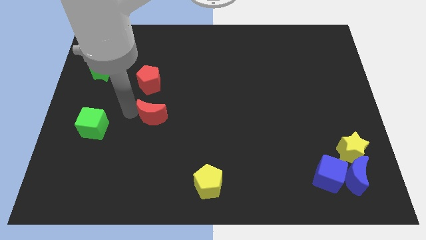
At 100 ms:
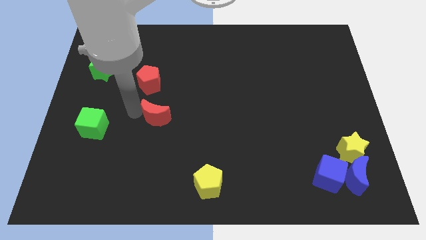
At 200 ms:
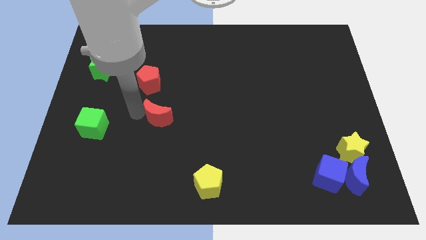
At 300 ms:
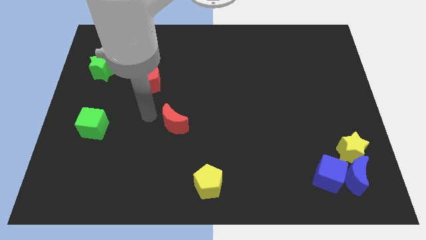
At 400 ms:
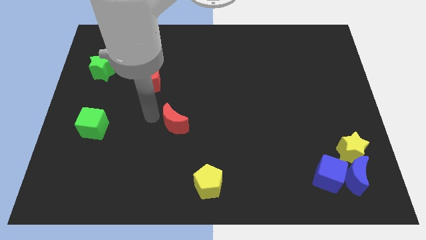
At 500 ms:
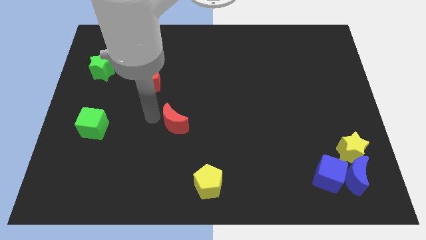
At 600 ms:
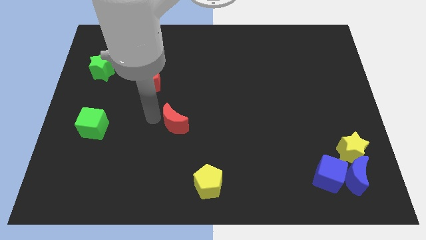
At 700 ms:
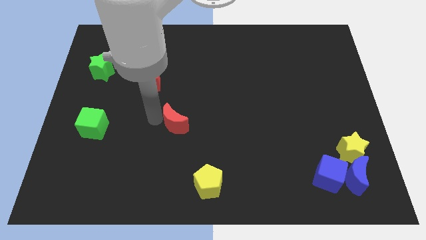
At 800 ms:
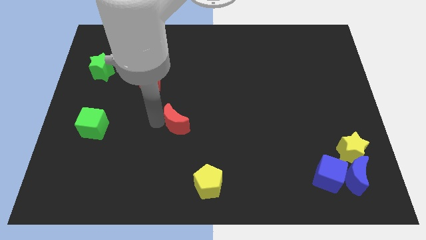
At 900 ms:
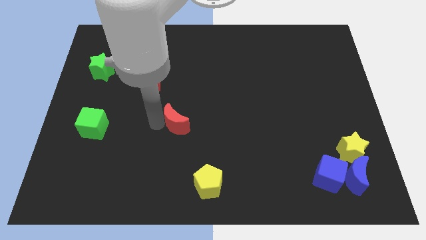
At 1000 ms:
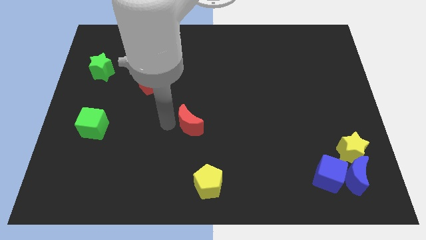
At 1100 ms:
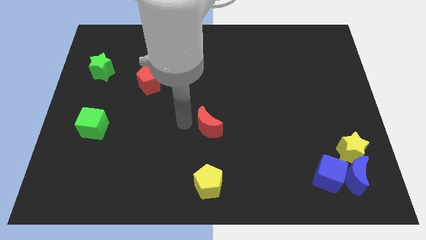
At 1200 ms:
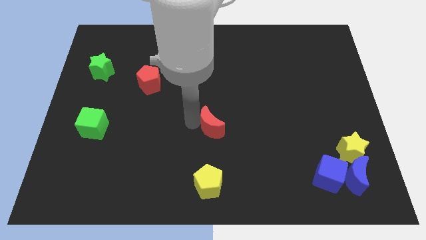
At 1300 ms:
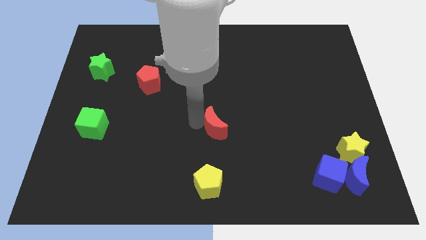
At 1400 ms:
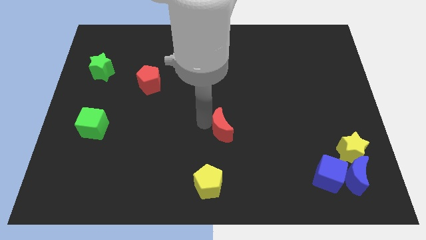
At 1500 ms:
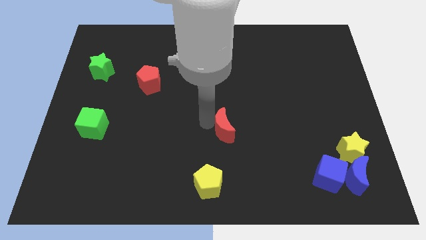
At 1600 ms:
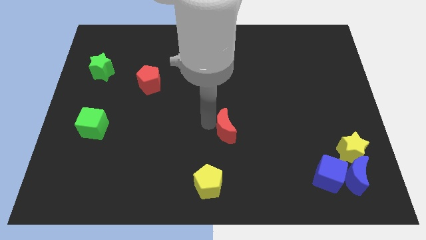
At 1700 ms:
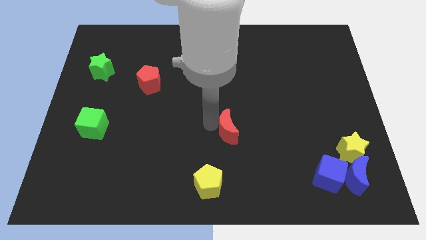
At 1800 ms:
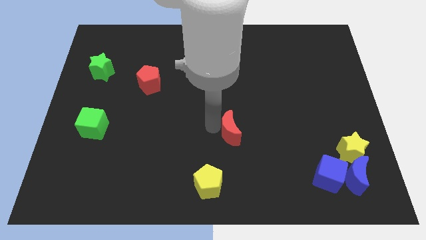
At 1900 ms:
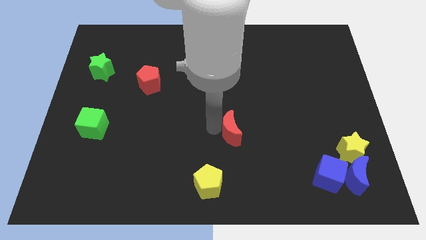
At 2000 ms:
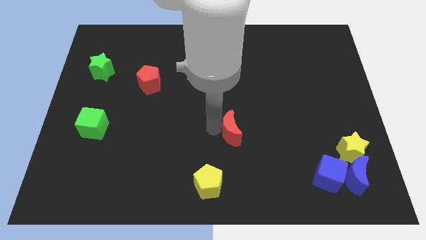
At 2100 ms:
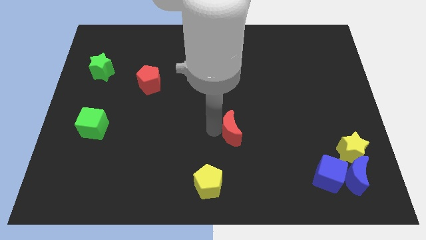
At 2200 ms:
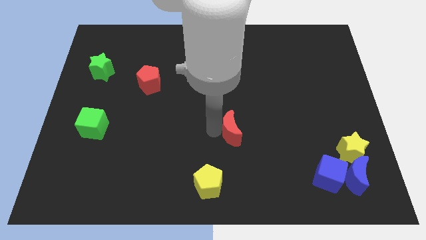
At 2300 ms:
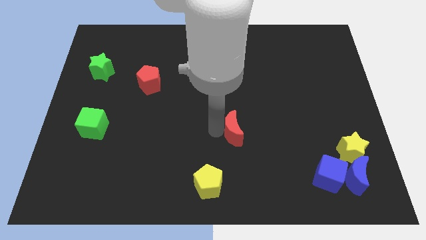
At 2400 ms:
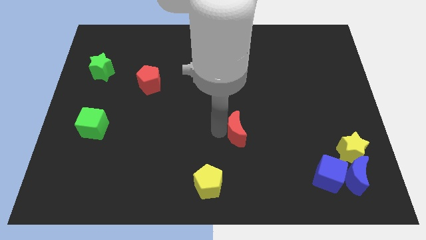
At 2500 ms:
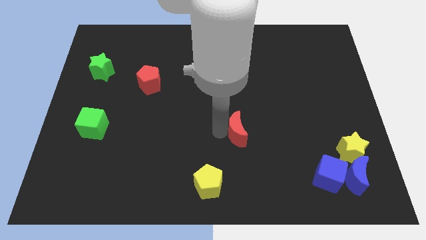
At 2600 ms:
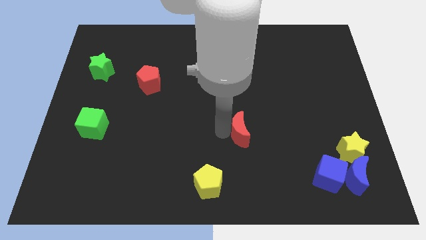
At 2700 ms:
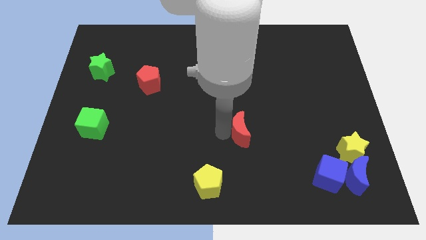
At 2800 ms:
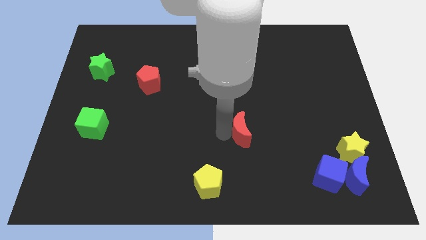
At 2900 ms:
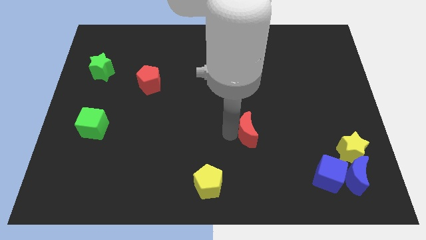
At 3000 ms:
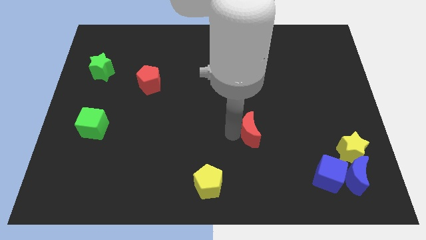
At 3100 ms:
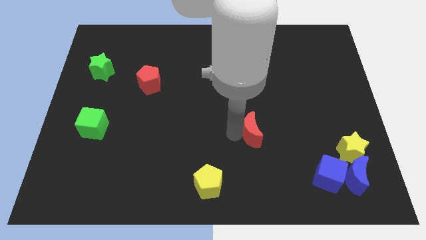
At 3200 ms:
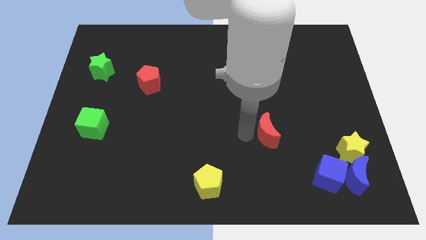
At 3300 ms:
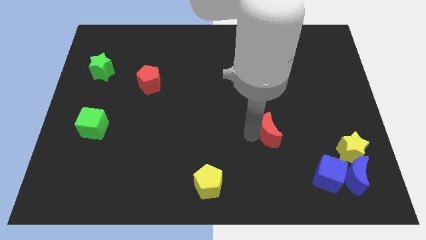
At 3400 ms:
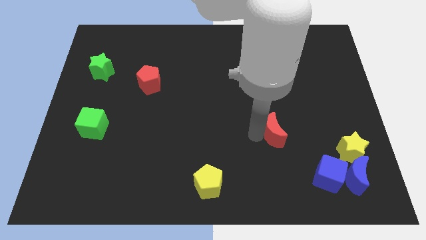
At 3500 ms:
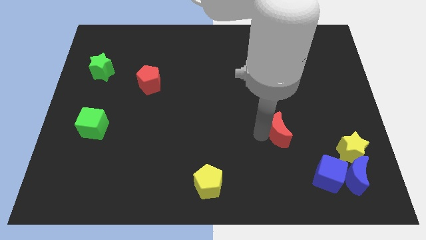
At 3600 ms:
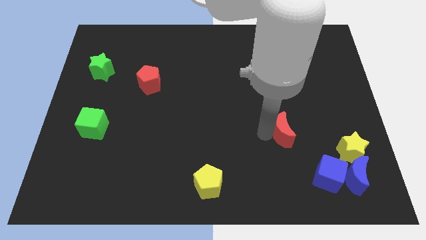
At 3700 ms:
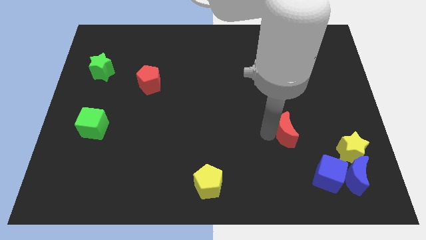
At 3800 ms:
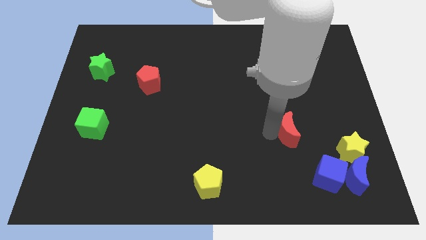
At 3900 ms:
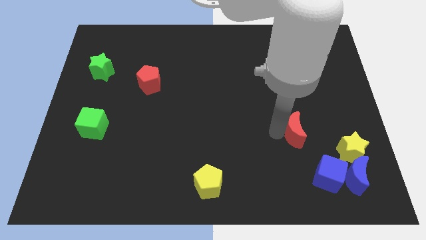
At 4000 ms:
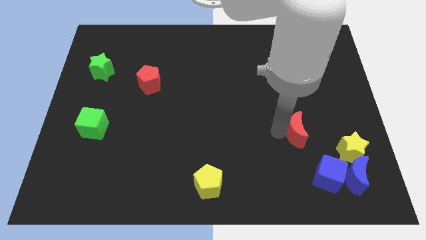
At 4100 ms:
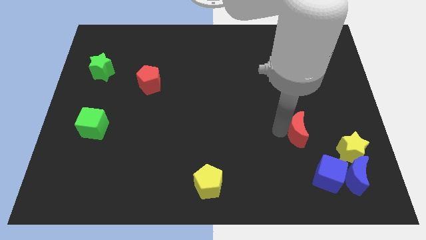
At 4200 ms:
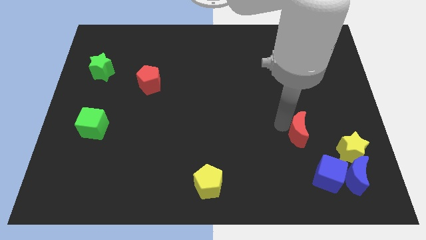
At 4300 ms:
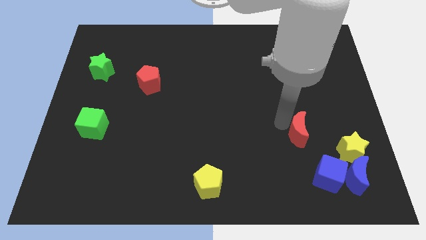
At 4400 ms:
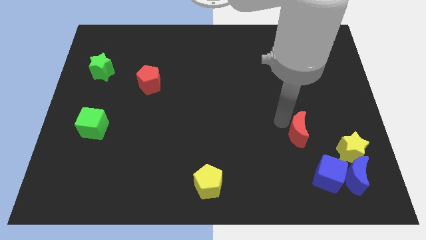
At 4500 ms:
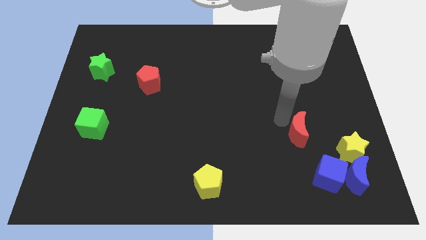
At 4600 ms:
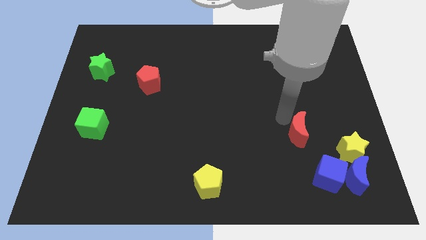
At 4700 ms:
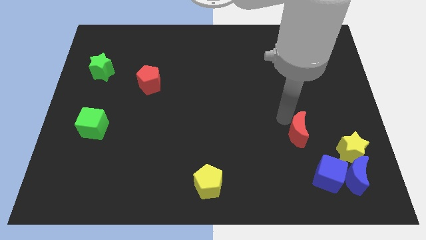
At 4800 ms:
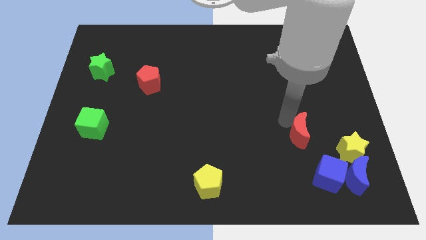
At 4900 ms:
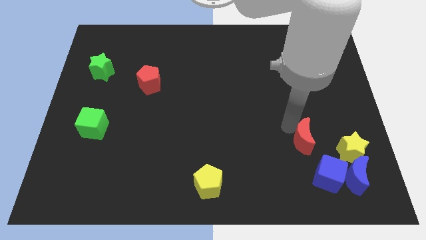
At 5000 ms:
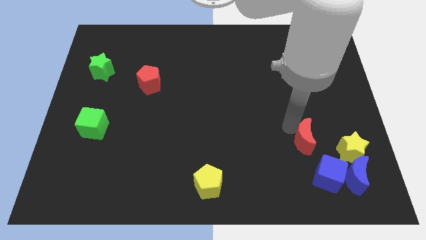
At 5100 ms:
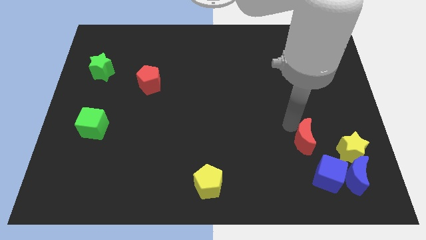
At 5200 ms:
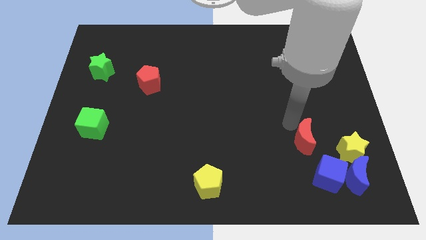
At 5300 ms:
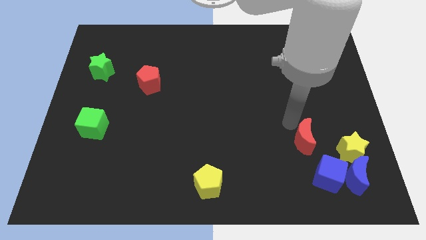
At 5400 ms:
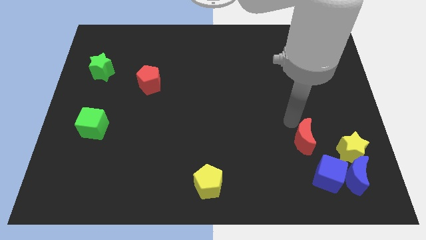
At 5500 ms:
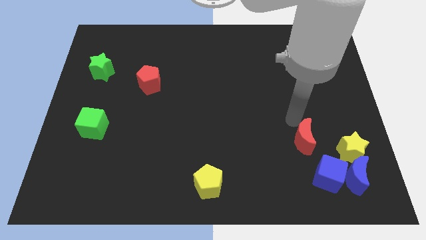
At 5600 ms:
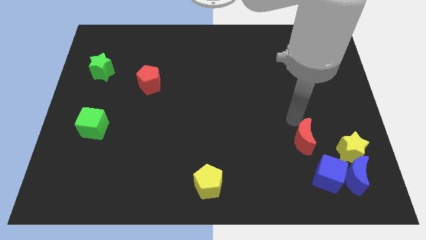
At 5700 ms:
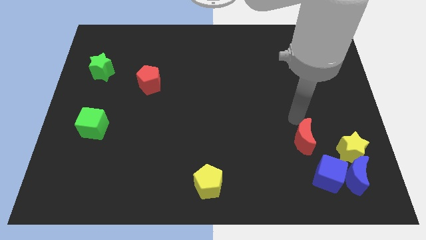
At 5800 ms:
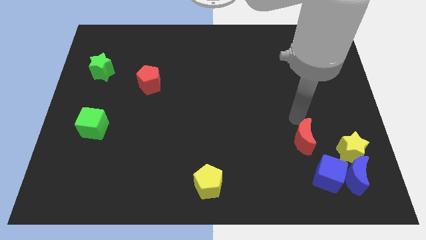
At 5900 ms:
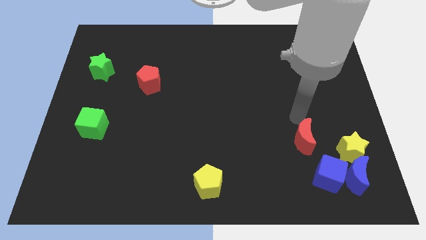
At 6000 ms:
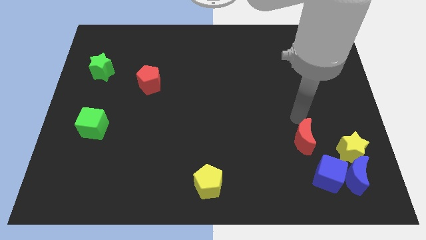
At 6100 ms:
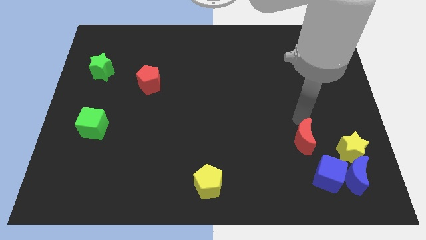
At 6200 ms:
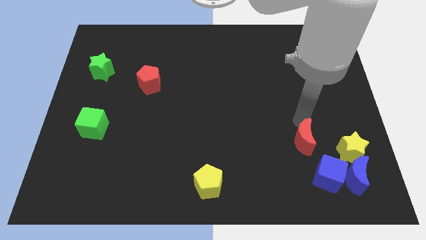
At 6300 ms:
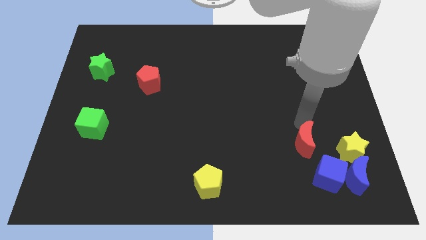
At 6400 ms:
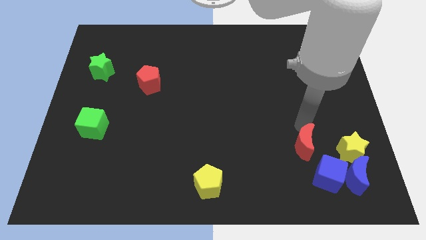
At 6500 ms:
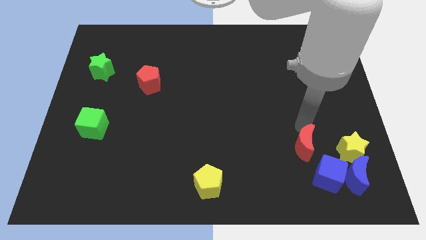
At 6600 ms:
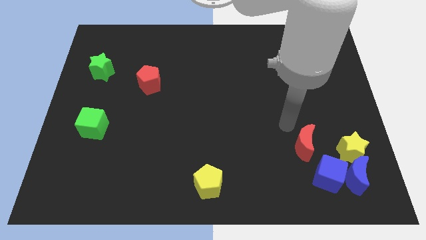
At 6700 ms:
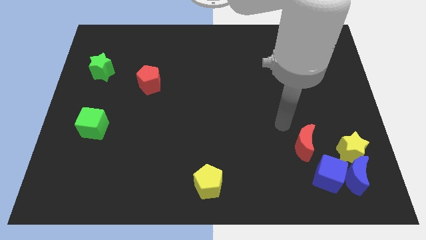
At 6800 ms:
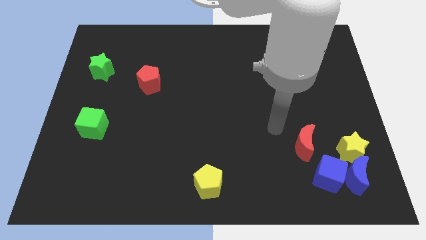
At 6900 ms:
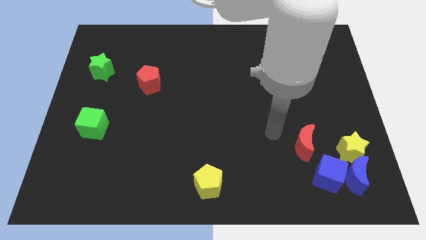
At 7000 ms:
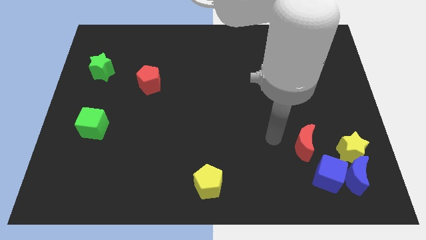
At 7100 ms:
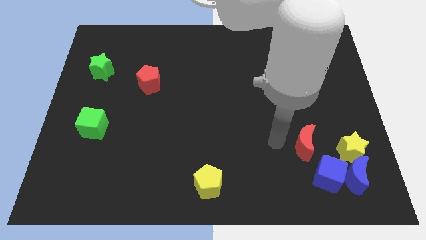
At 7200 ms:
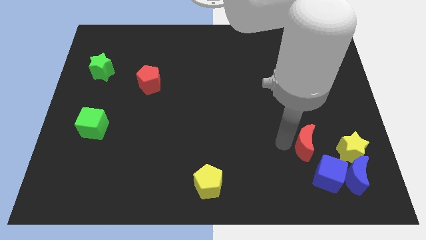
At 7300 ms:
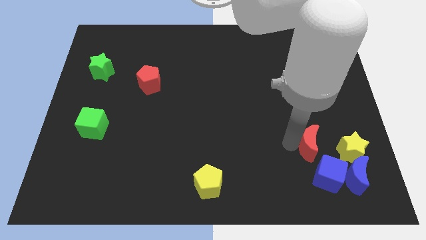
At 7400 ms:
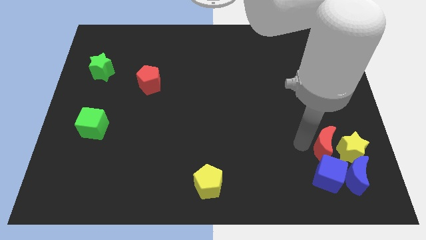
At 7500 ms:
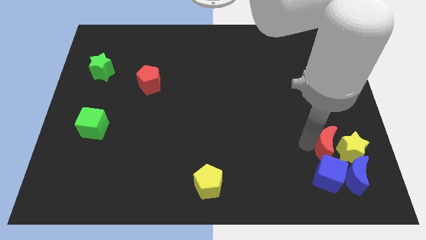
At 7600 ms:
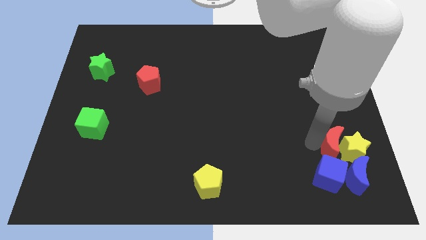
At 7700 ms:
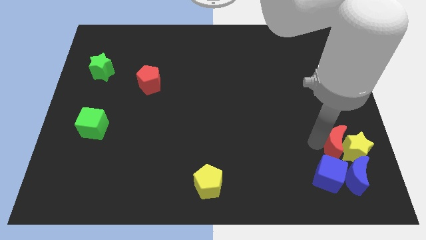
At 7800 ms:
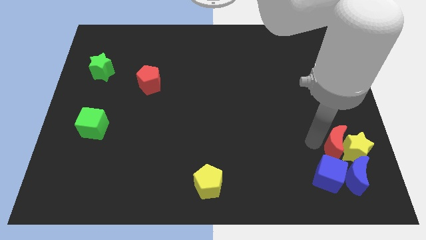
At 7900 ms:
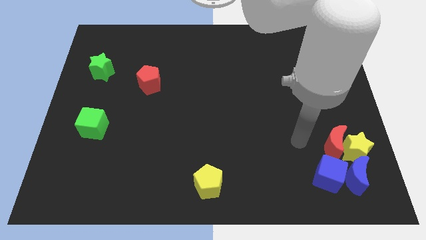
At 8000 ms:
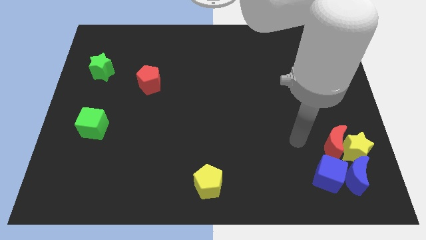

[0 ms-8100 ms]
push red moon into yellow star

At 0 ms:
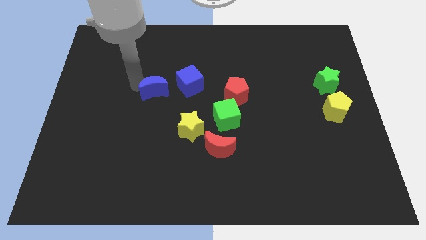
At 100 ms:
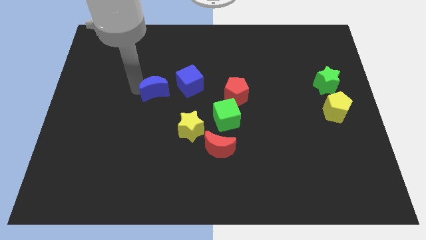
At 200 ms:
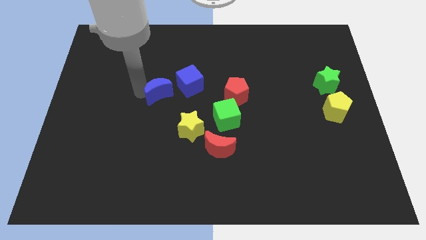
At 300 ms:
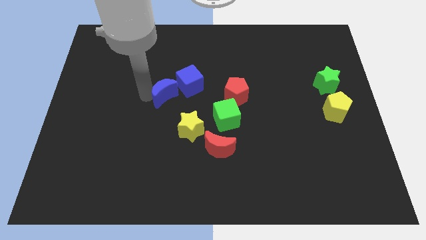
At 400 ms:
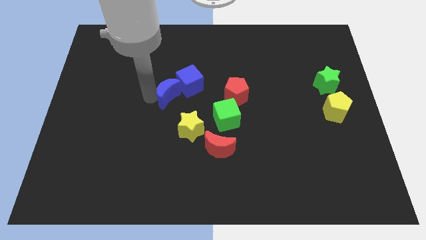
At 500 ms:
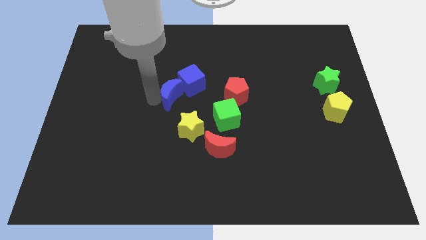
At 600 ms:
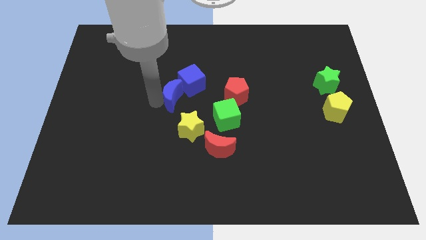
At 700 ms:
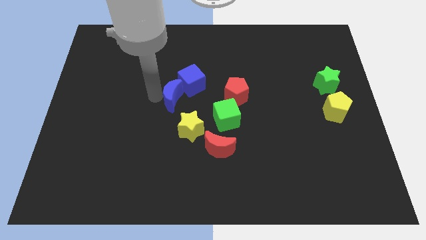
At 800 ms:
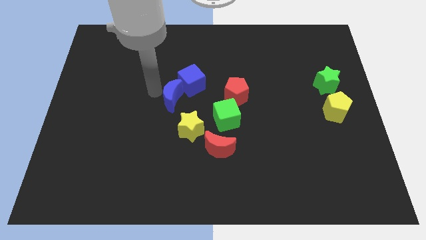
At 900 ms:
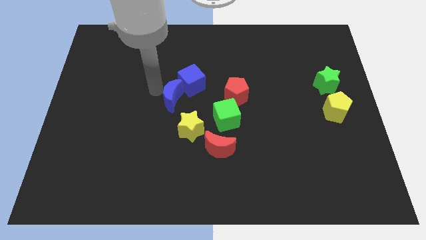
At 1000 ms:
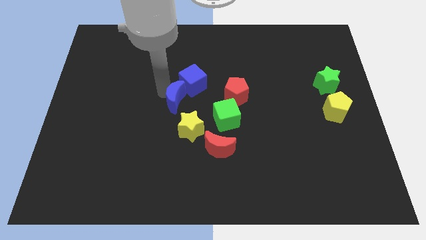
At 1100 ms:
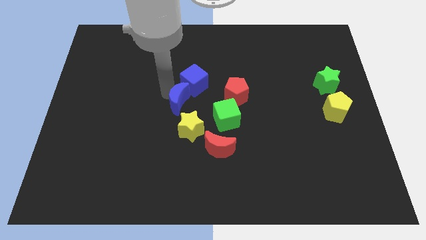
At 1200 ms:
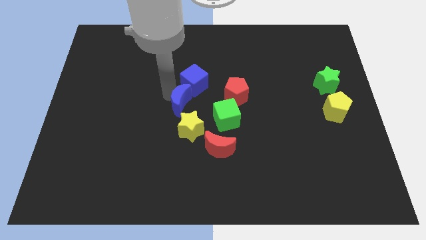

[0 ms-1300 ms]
slide the blue crescent into the blue cube
